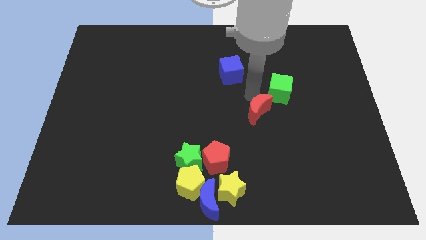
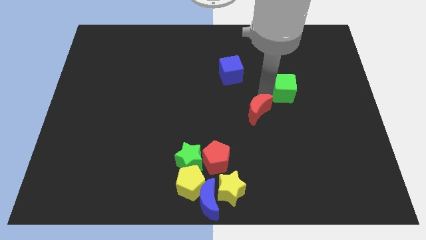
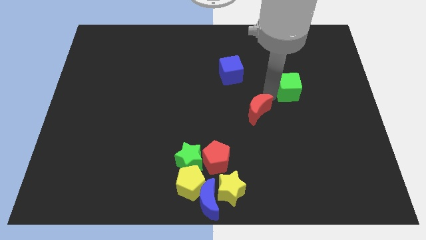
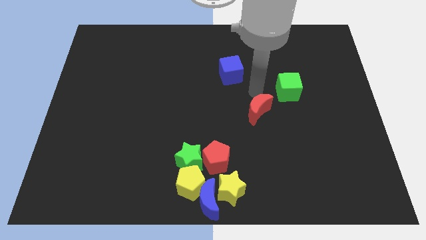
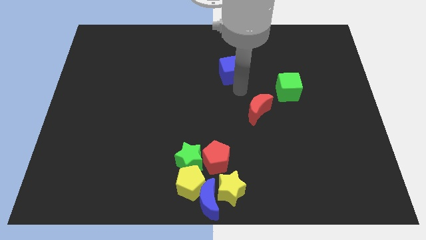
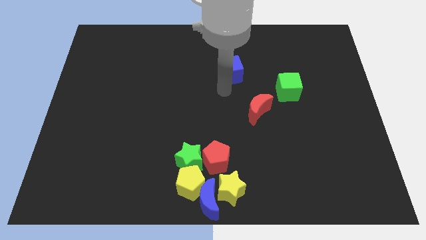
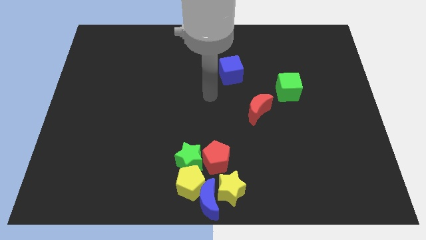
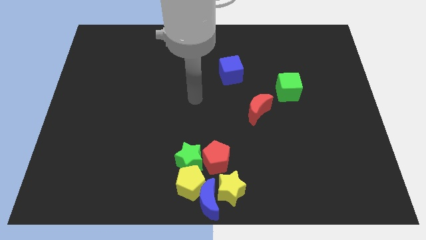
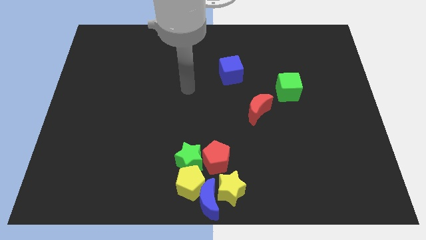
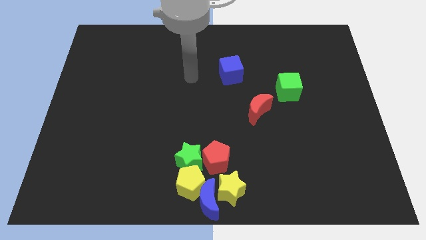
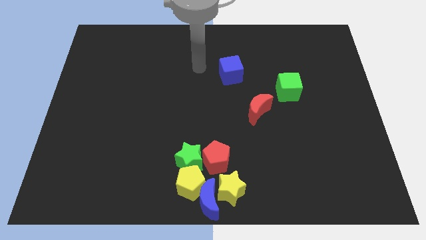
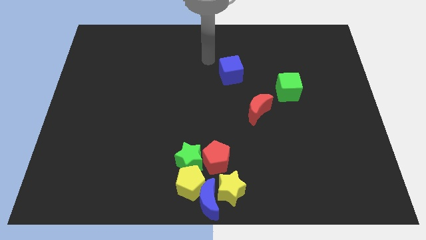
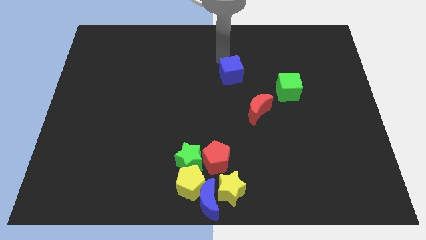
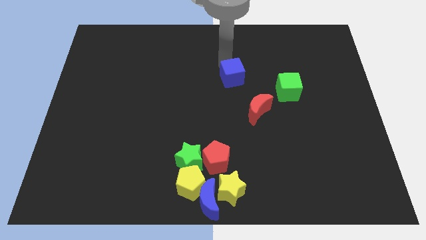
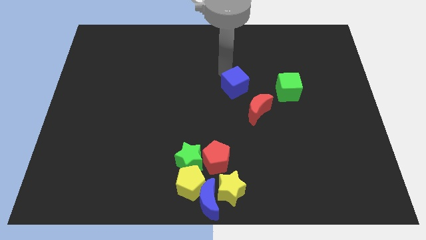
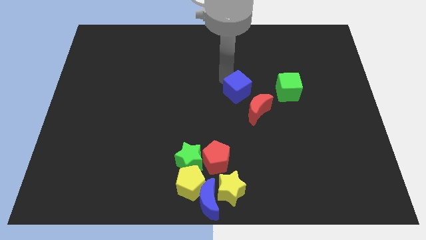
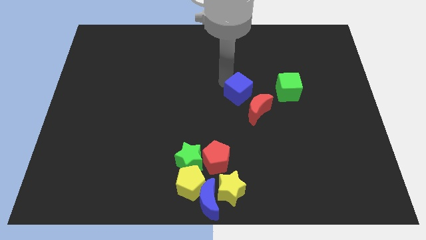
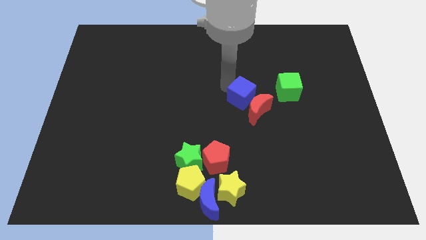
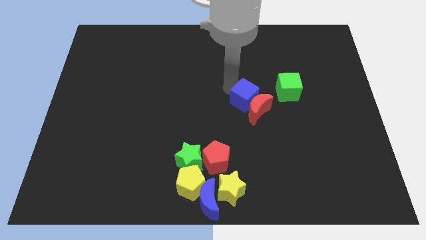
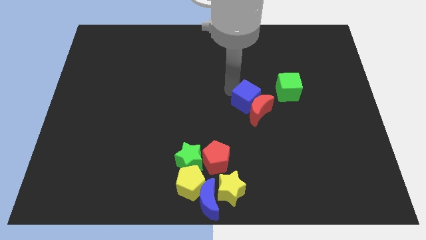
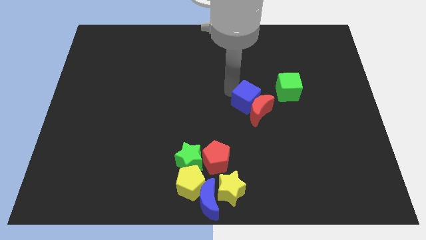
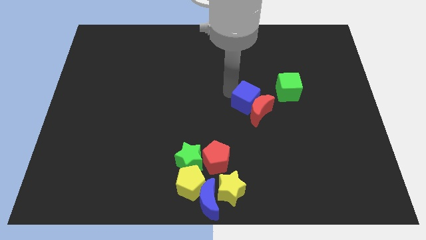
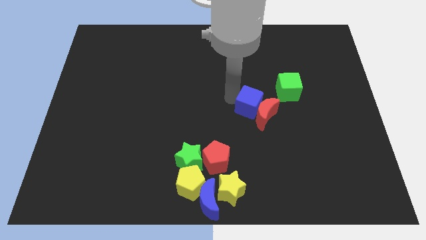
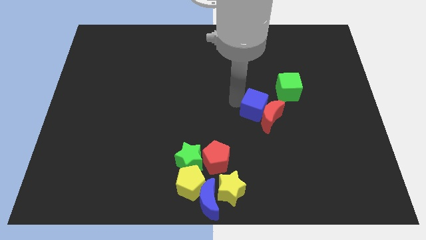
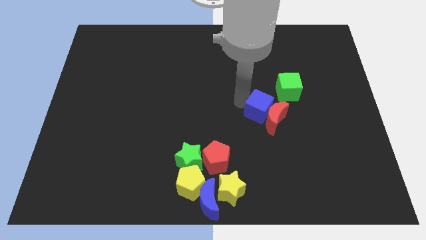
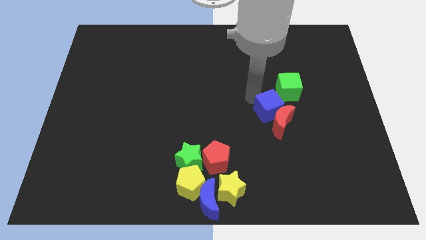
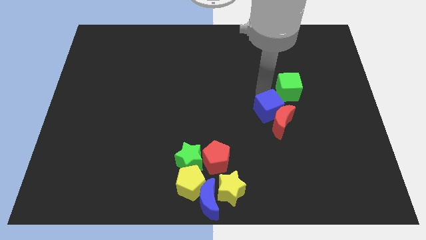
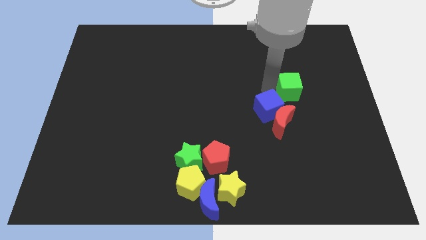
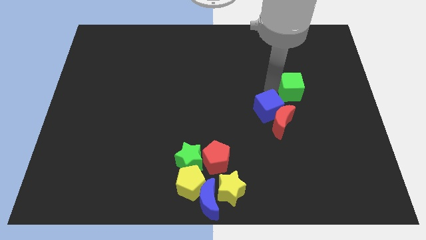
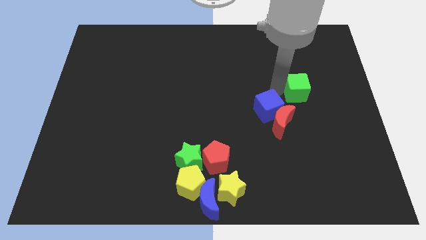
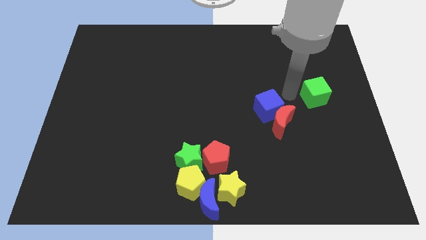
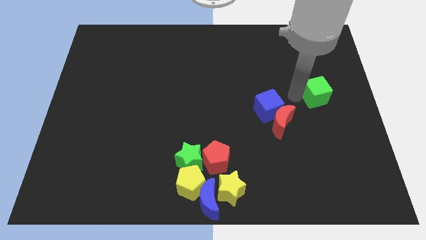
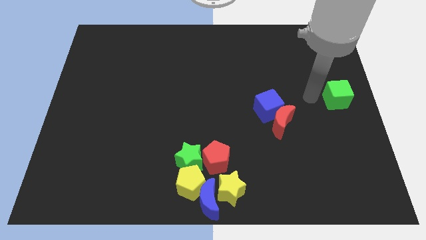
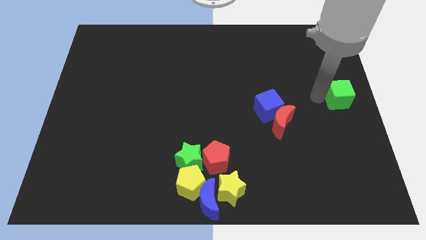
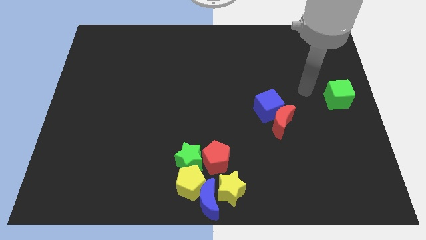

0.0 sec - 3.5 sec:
move the green cube to the center right of the board

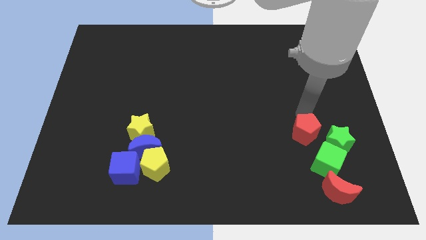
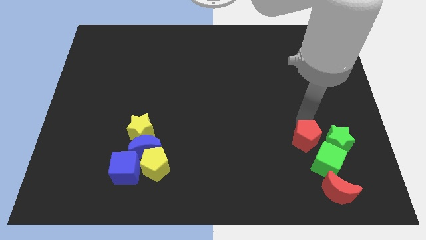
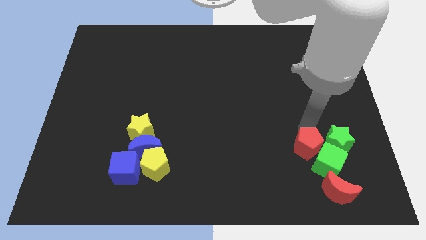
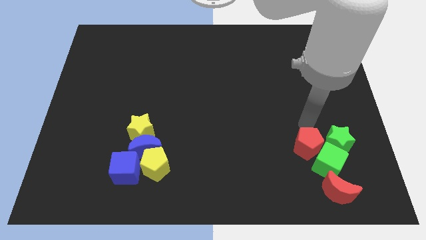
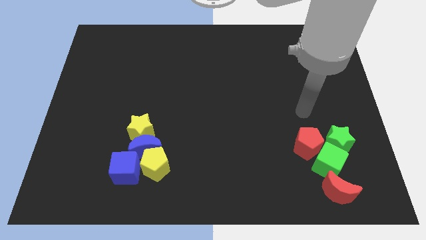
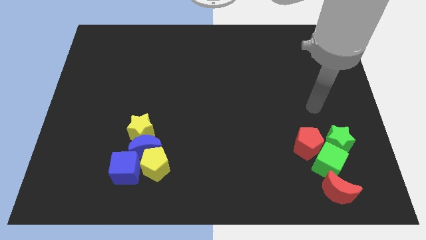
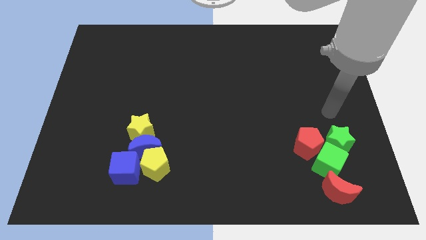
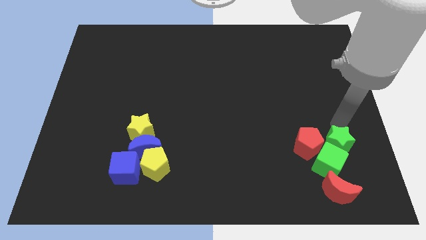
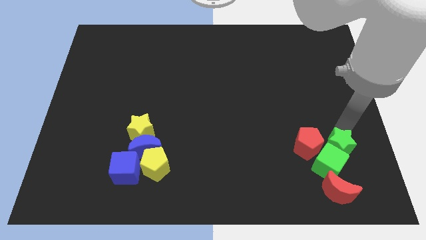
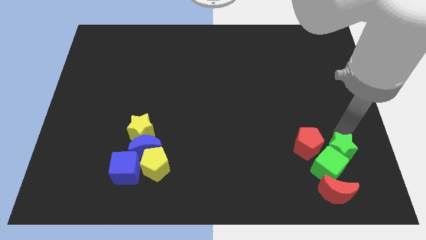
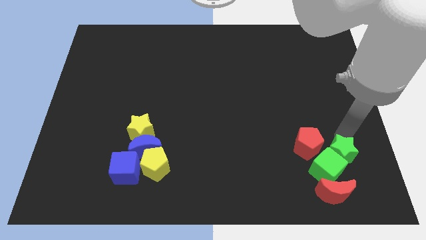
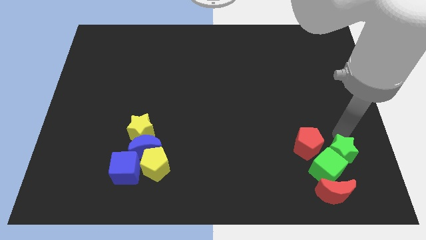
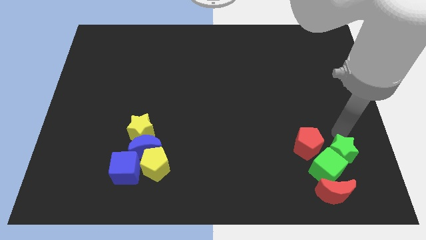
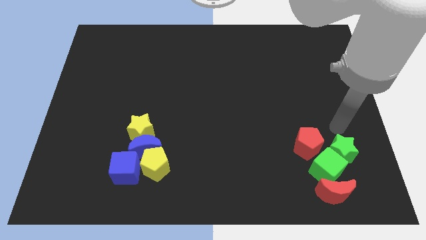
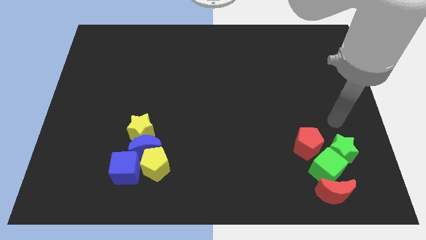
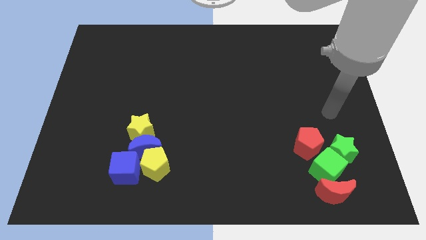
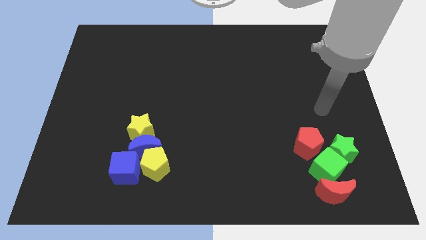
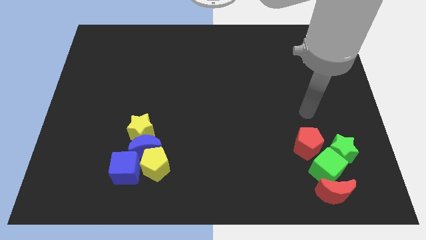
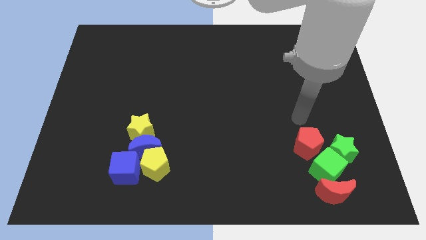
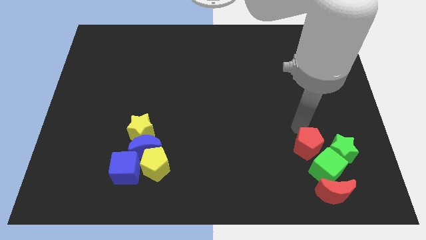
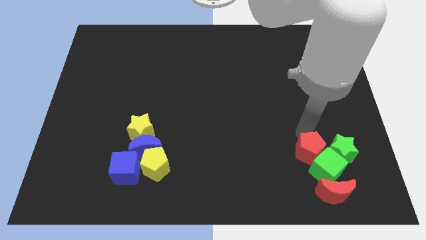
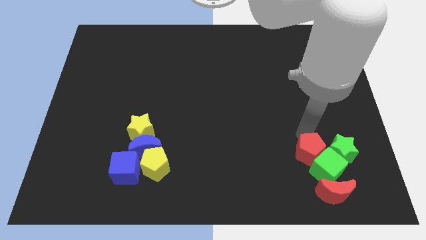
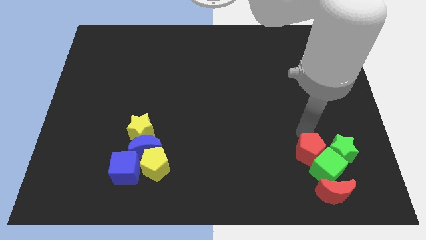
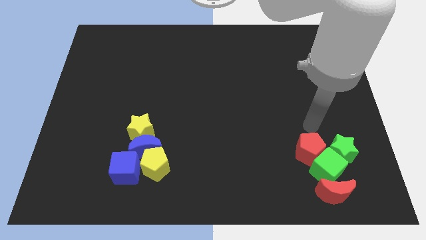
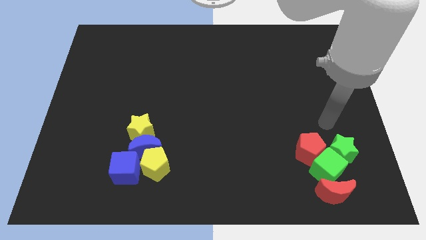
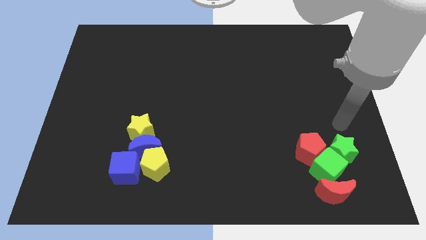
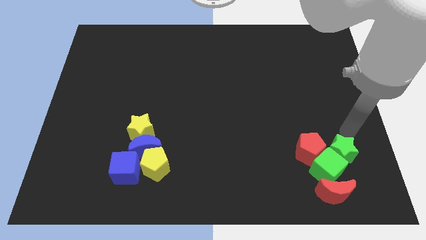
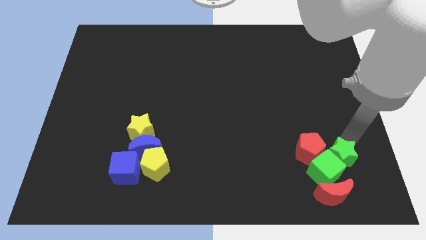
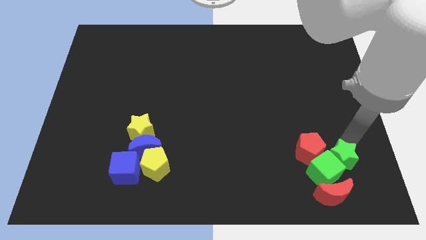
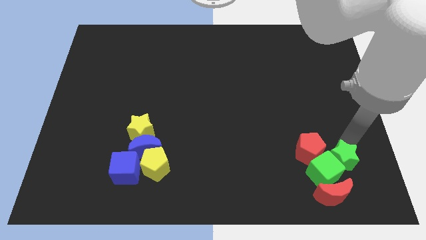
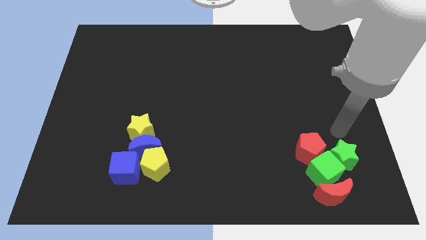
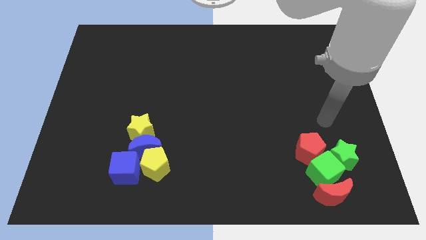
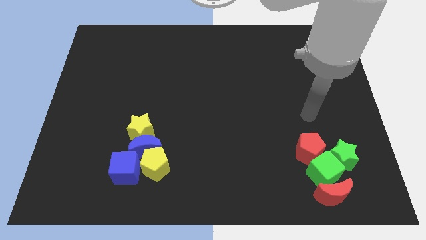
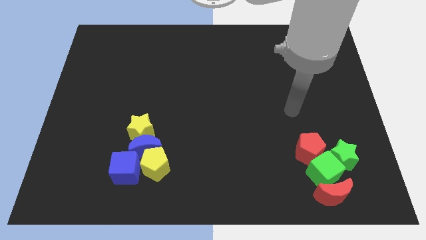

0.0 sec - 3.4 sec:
adjust the group of blocks at the bottom right of the table

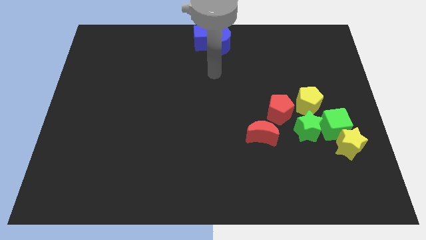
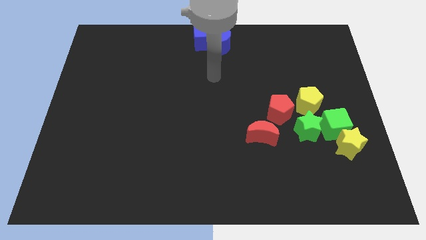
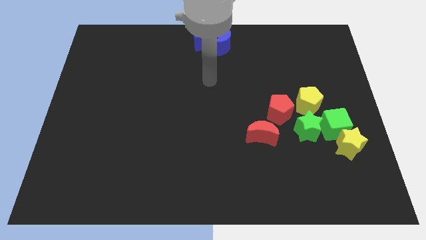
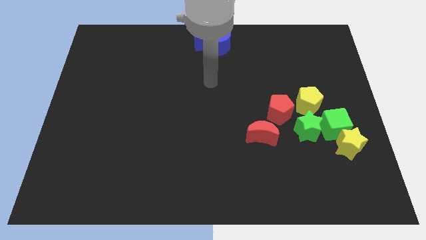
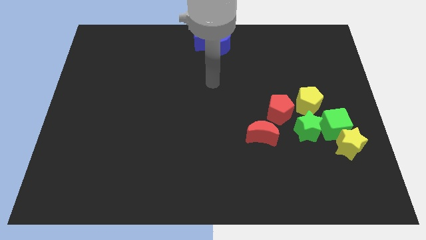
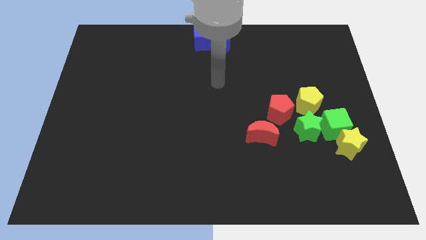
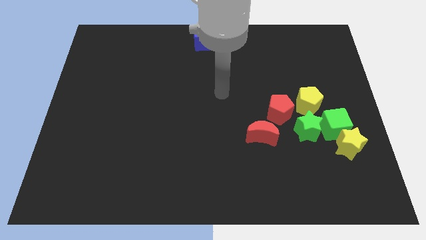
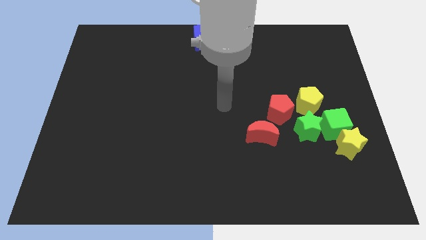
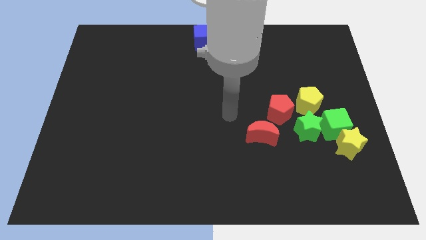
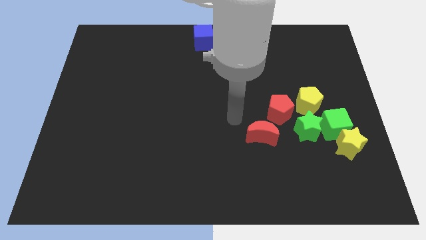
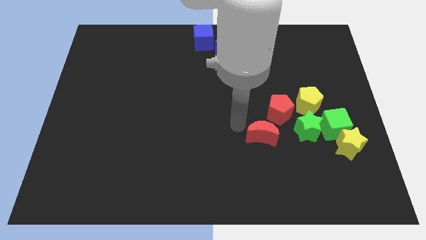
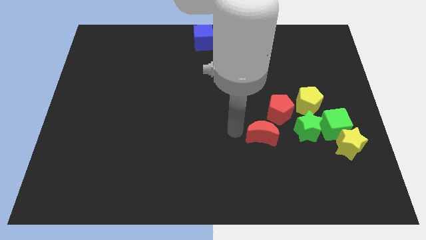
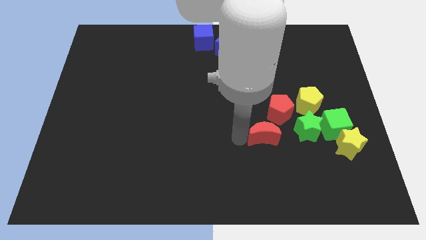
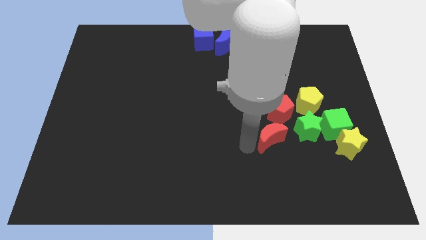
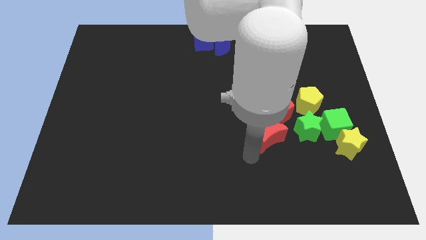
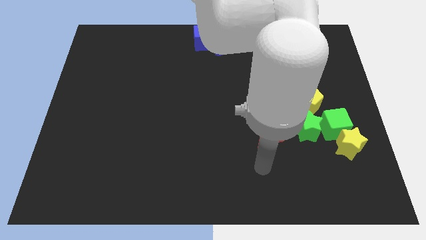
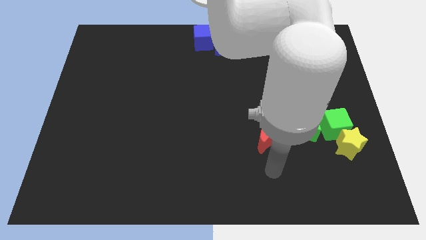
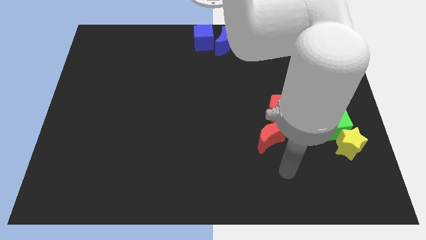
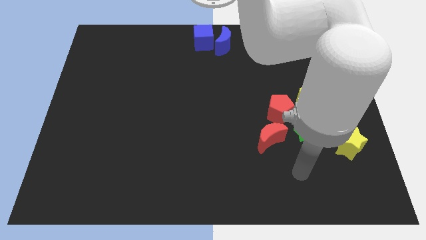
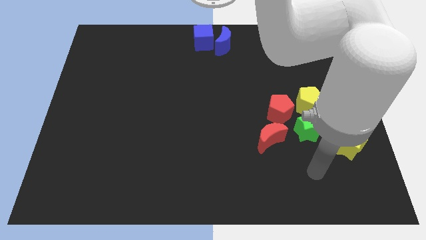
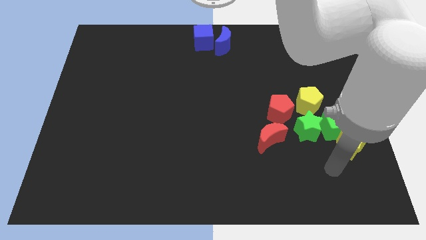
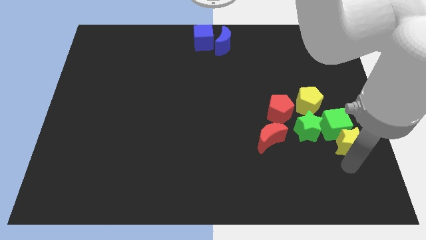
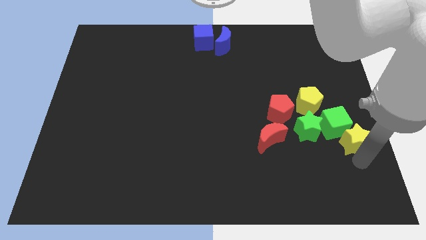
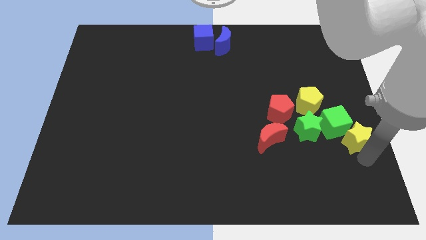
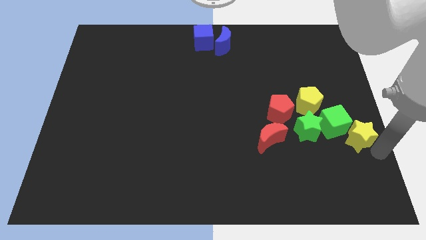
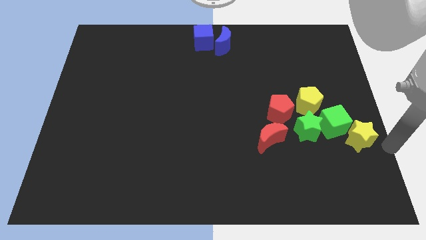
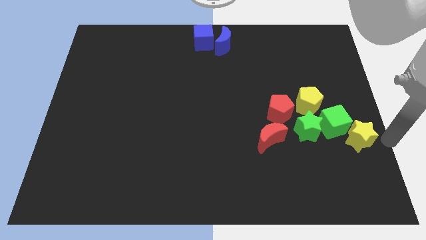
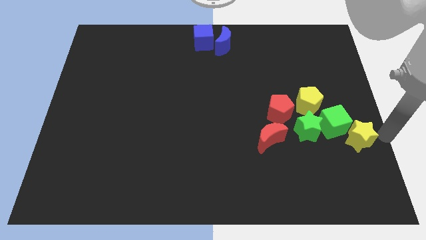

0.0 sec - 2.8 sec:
move yourself to the right side of the yellow star
